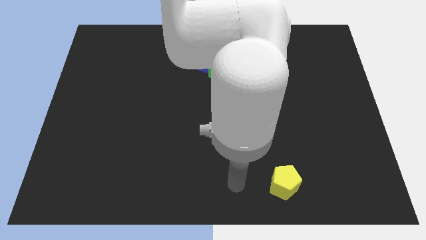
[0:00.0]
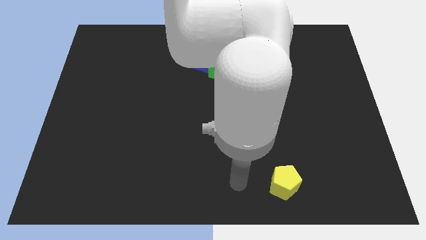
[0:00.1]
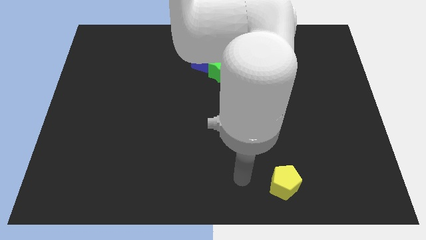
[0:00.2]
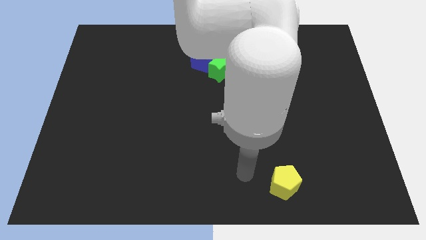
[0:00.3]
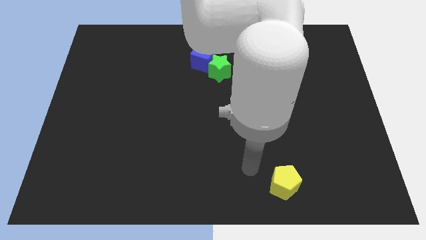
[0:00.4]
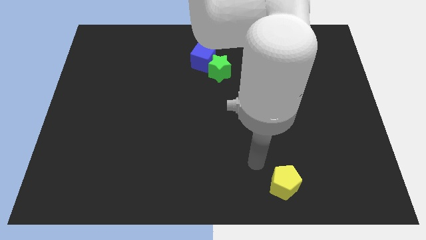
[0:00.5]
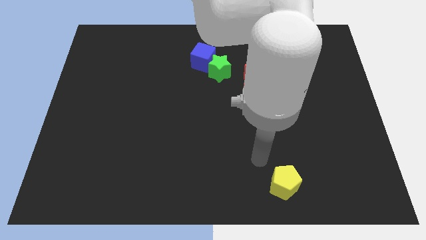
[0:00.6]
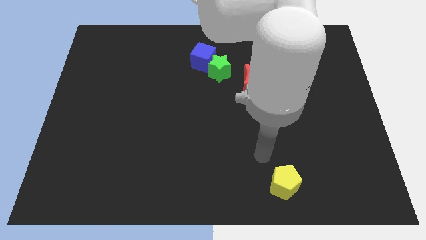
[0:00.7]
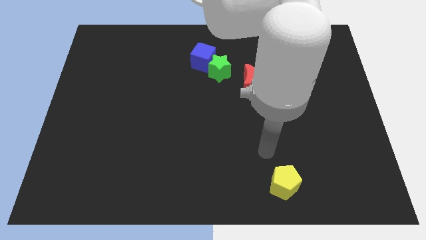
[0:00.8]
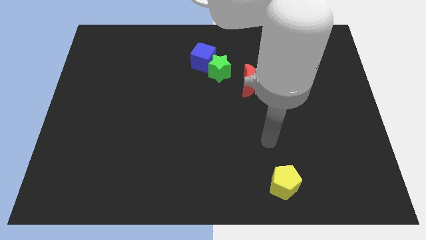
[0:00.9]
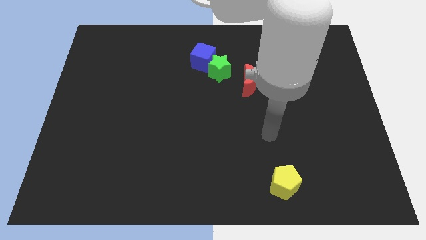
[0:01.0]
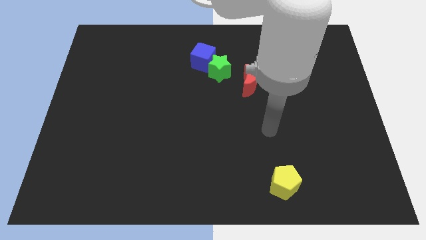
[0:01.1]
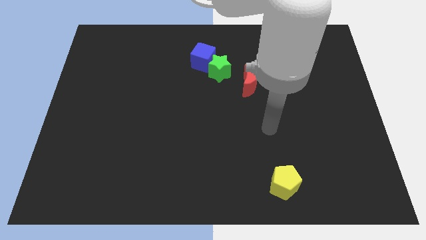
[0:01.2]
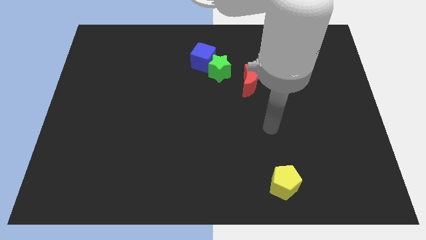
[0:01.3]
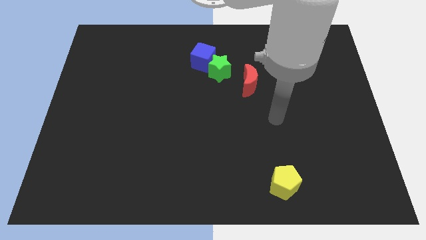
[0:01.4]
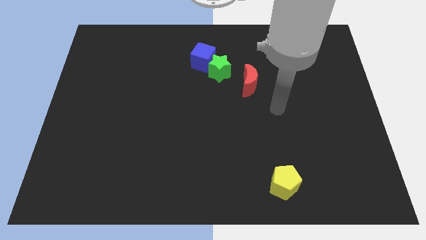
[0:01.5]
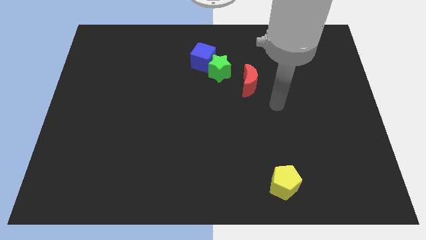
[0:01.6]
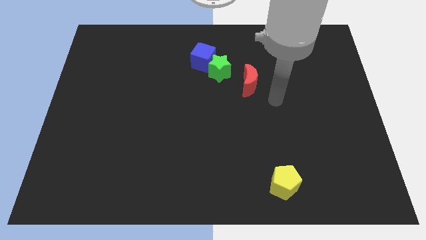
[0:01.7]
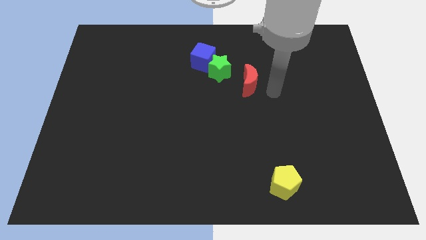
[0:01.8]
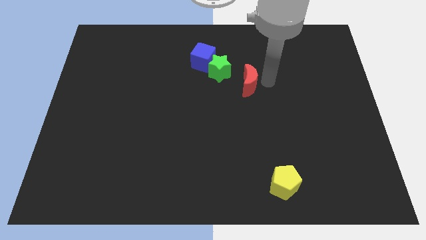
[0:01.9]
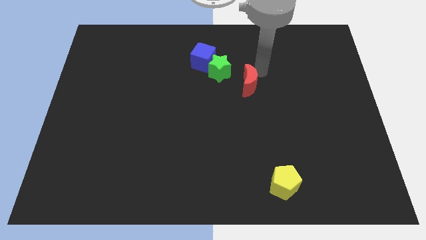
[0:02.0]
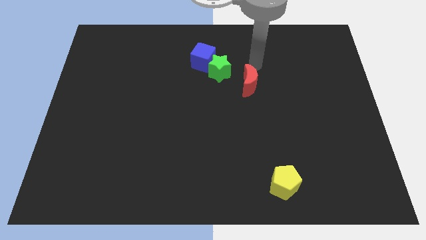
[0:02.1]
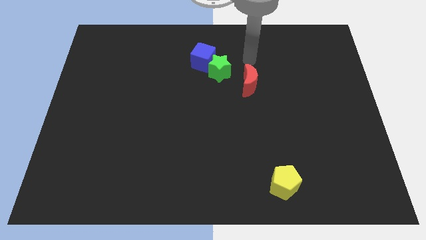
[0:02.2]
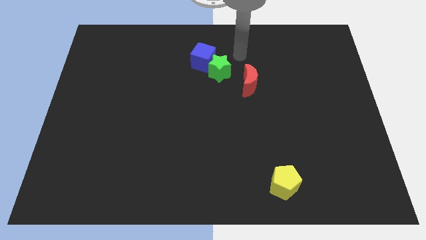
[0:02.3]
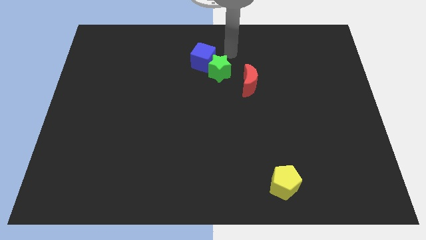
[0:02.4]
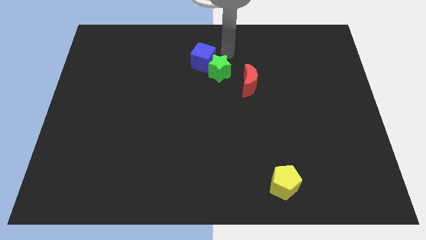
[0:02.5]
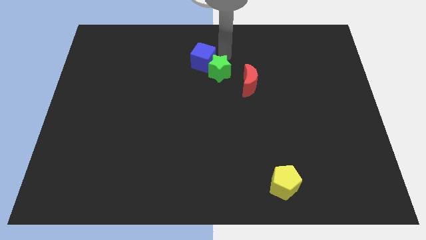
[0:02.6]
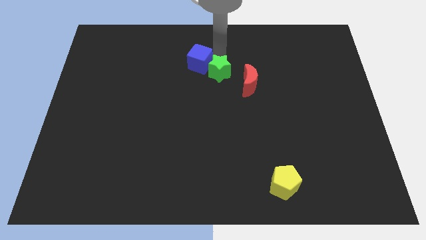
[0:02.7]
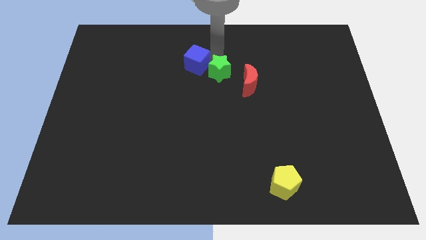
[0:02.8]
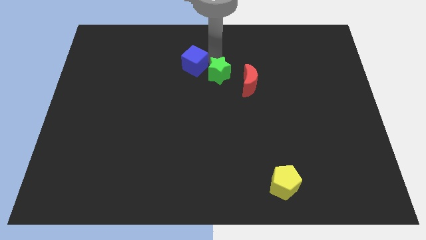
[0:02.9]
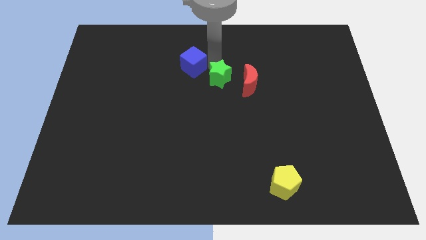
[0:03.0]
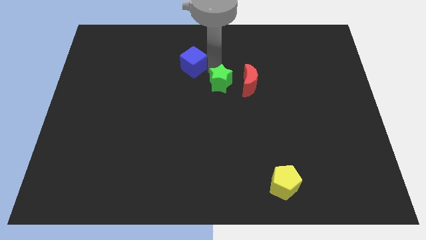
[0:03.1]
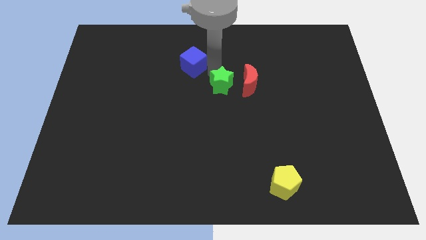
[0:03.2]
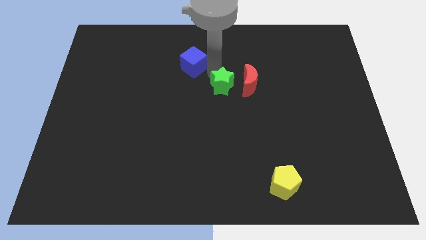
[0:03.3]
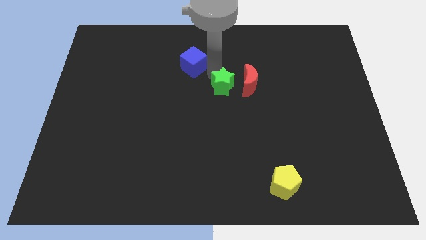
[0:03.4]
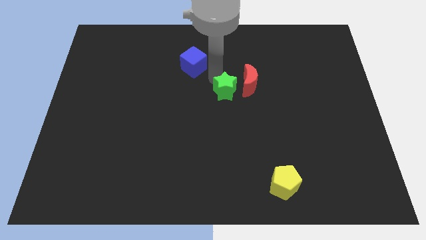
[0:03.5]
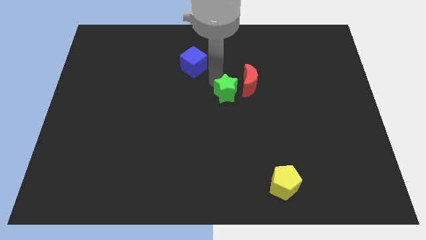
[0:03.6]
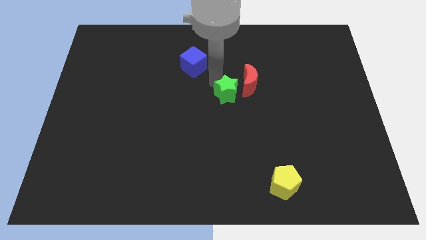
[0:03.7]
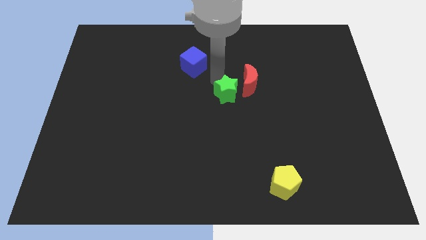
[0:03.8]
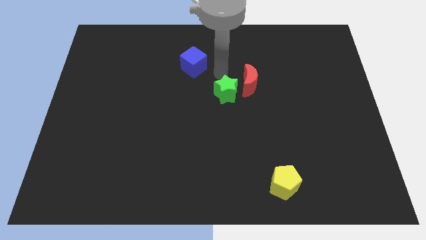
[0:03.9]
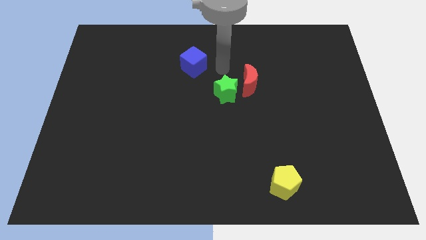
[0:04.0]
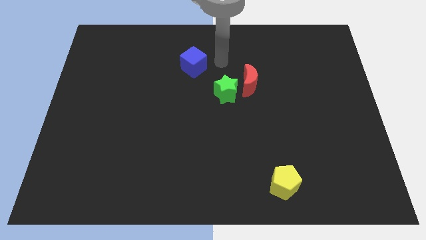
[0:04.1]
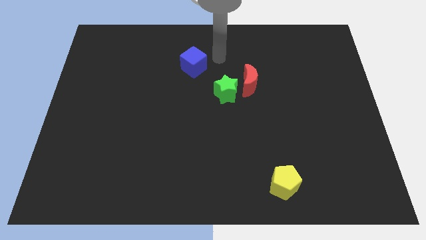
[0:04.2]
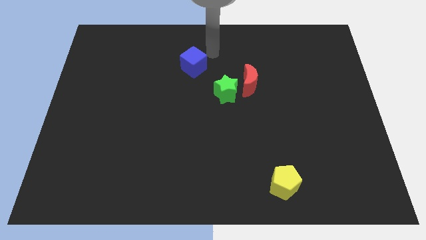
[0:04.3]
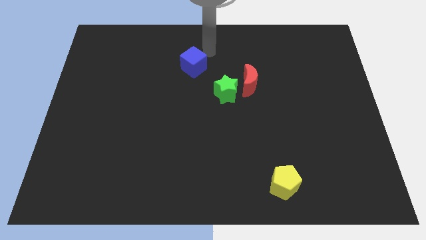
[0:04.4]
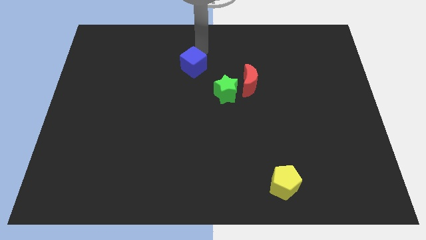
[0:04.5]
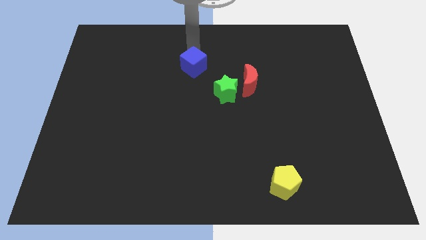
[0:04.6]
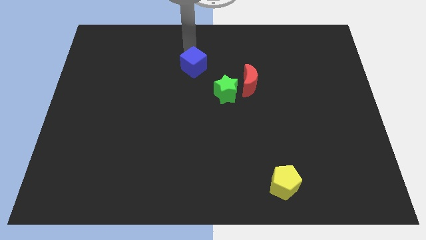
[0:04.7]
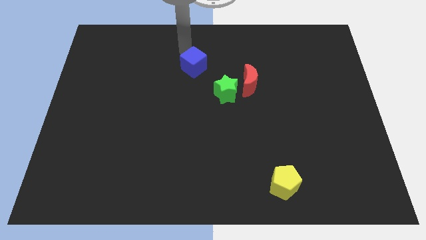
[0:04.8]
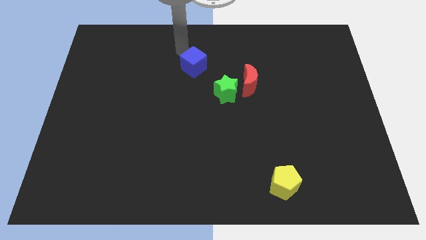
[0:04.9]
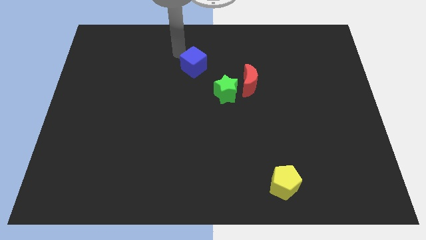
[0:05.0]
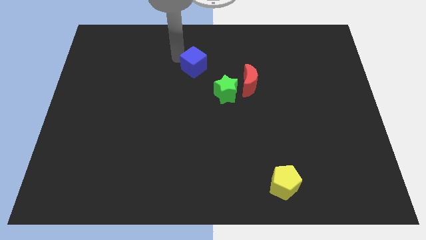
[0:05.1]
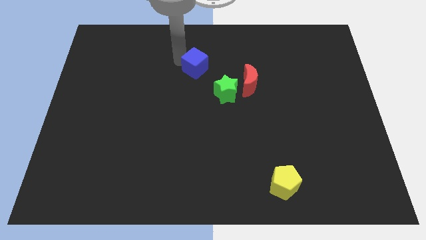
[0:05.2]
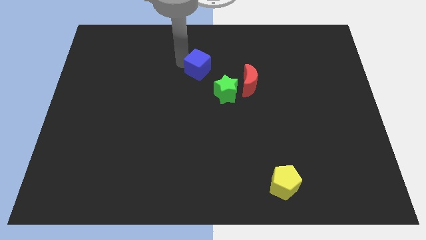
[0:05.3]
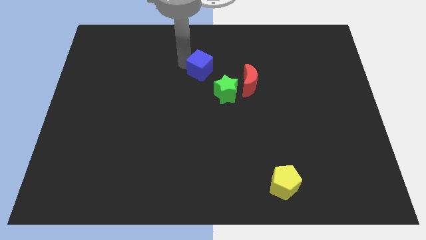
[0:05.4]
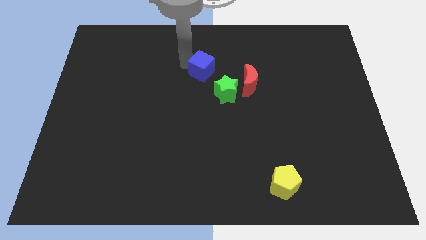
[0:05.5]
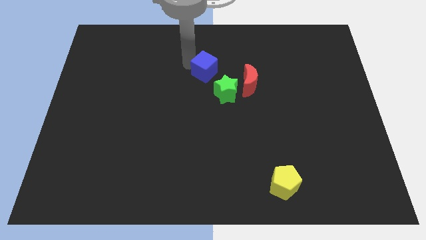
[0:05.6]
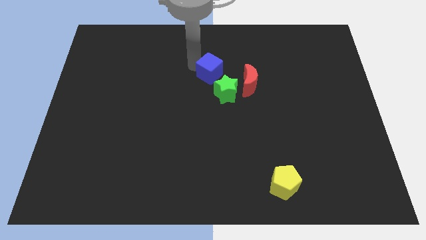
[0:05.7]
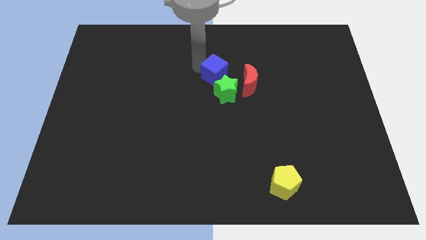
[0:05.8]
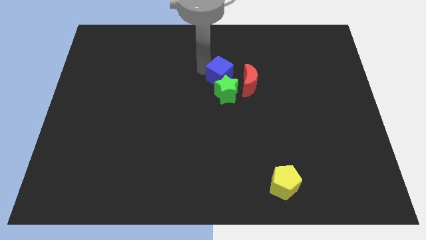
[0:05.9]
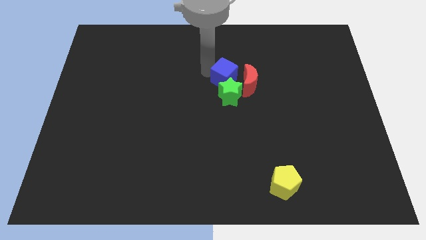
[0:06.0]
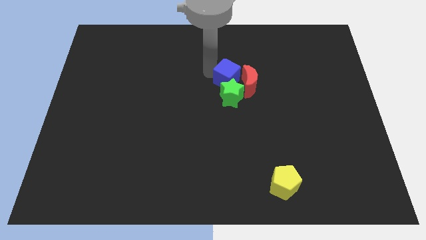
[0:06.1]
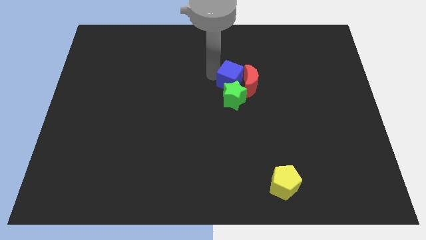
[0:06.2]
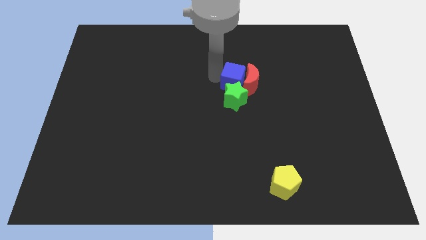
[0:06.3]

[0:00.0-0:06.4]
slide the blue block close to the red moon

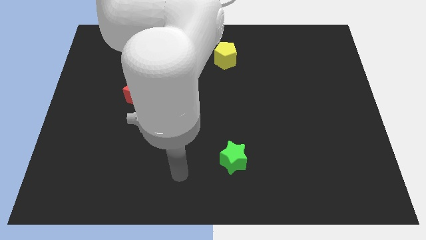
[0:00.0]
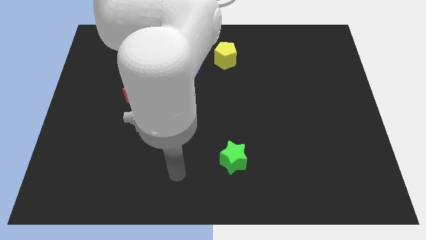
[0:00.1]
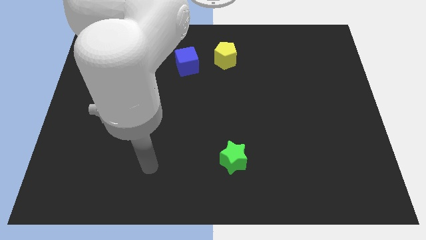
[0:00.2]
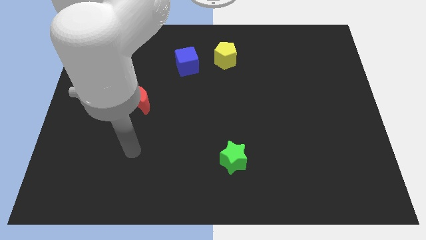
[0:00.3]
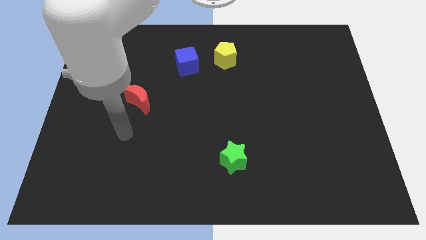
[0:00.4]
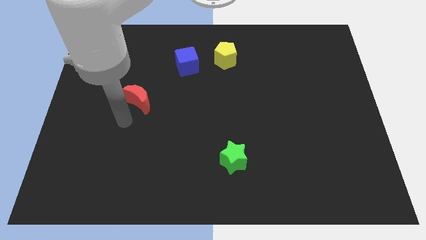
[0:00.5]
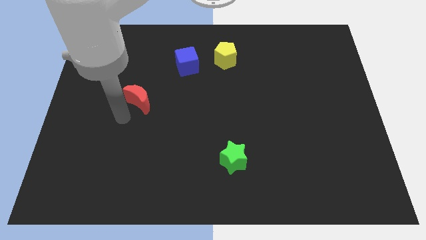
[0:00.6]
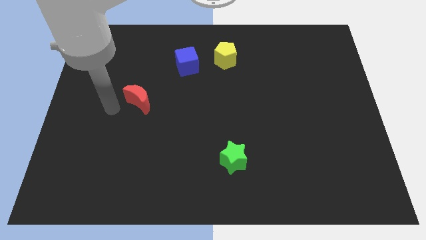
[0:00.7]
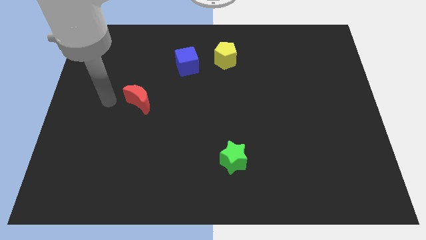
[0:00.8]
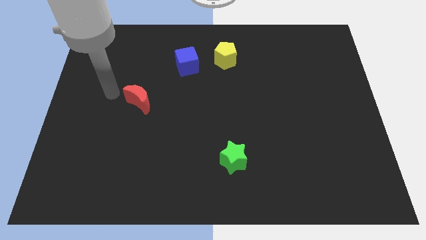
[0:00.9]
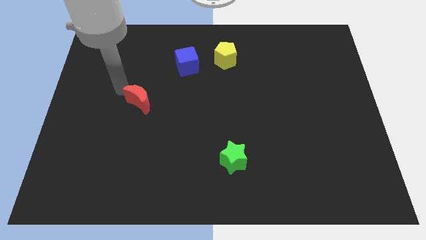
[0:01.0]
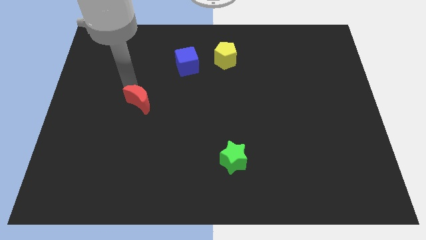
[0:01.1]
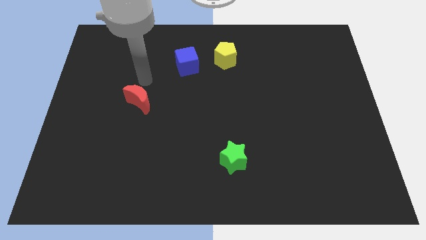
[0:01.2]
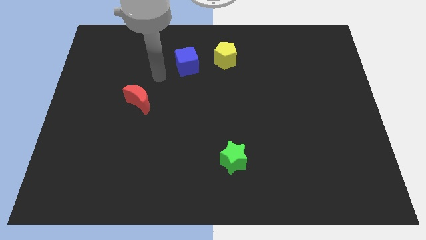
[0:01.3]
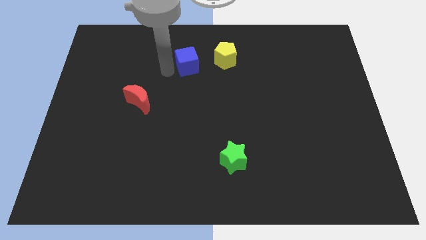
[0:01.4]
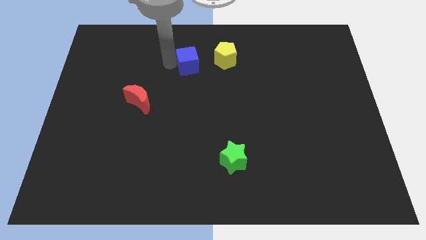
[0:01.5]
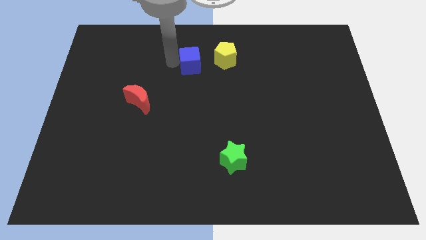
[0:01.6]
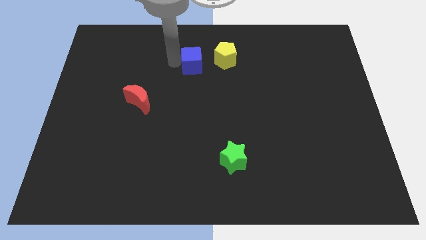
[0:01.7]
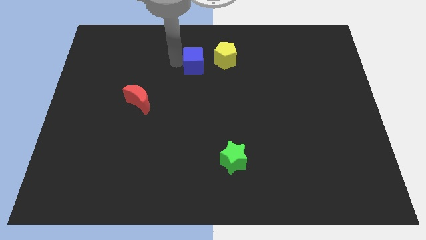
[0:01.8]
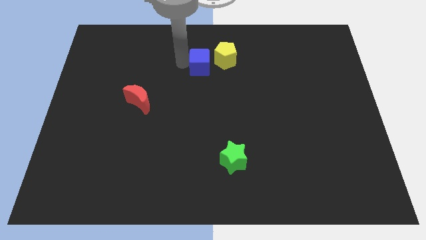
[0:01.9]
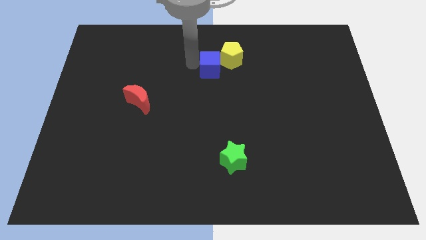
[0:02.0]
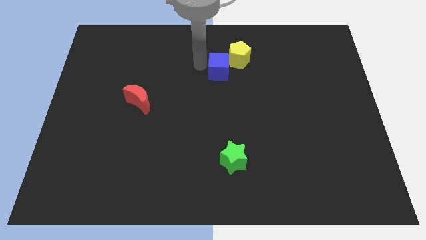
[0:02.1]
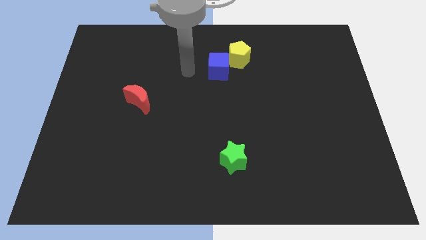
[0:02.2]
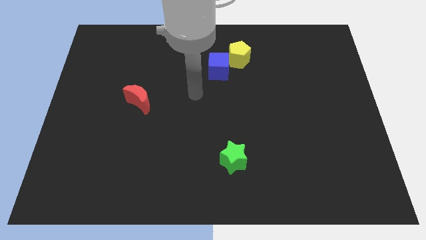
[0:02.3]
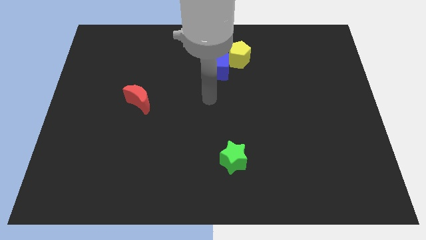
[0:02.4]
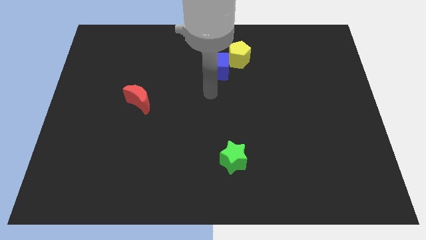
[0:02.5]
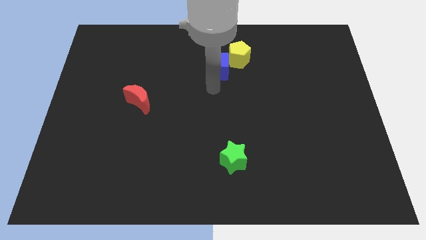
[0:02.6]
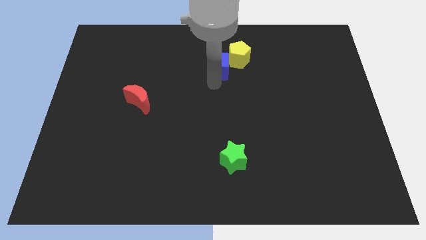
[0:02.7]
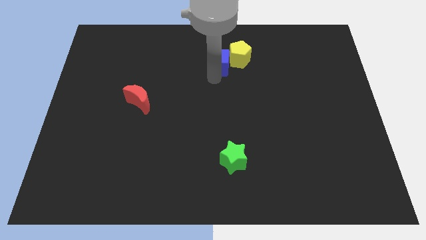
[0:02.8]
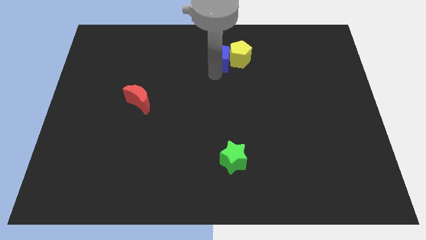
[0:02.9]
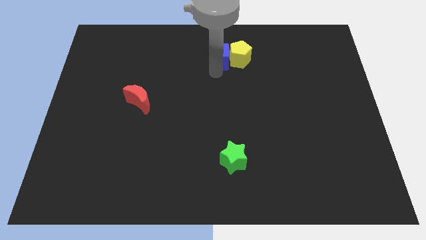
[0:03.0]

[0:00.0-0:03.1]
slide the cube to the pentagon
